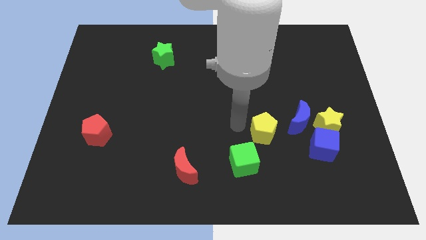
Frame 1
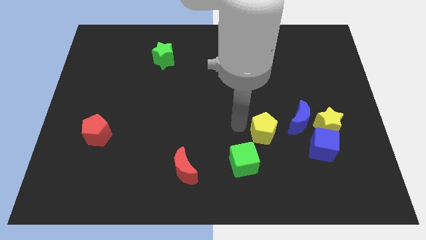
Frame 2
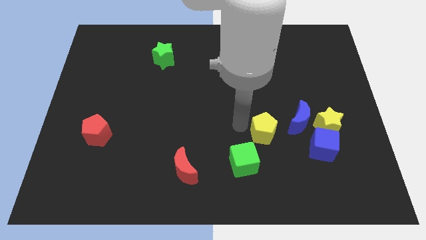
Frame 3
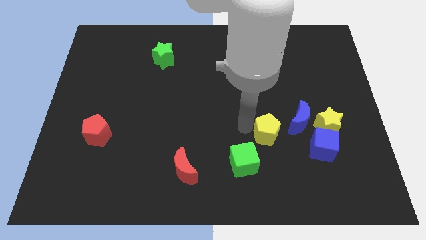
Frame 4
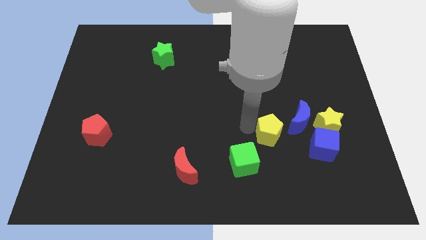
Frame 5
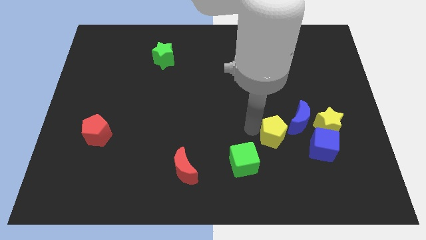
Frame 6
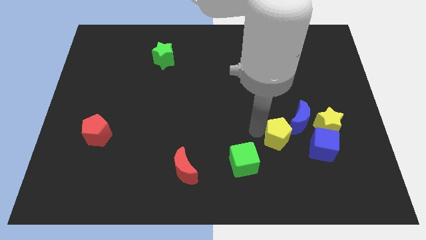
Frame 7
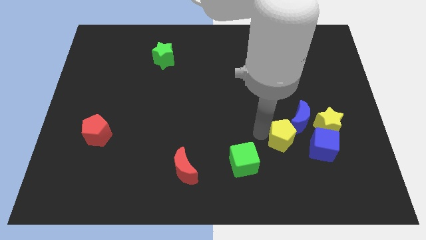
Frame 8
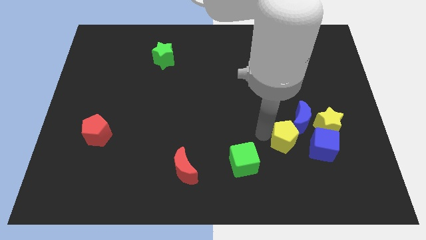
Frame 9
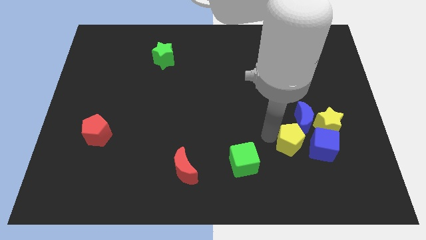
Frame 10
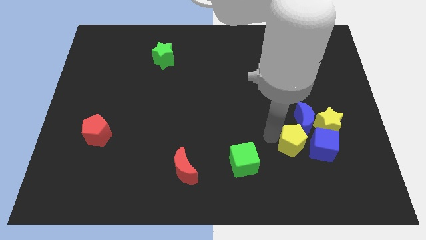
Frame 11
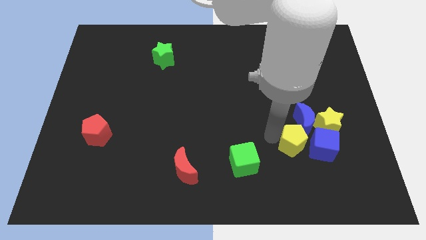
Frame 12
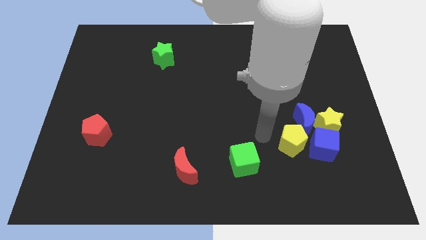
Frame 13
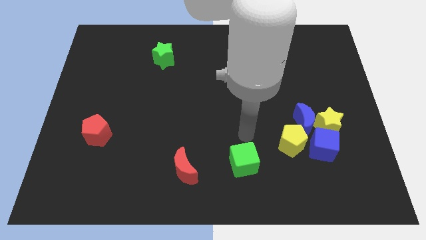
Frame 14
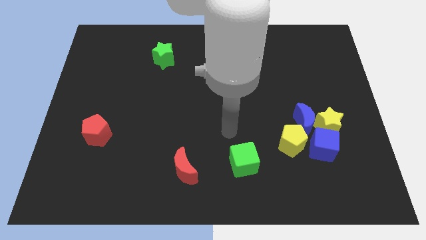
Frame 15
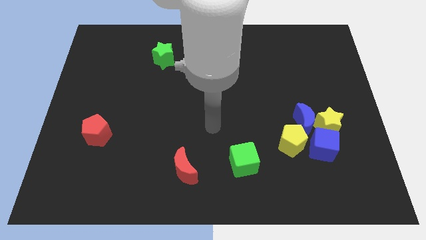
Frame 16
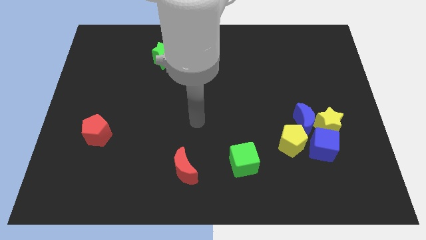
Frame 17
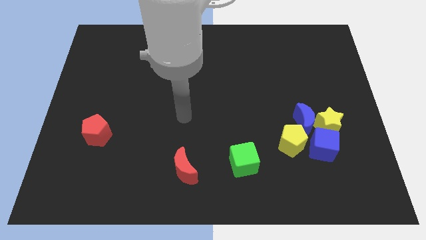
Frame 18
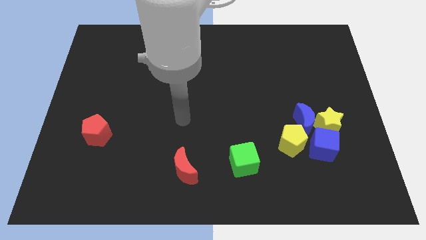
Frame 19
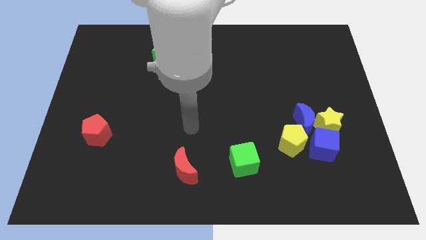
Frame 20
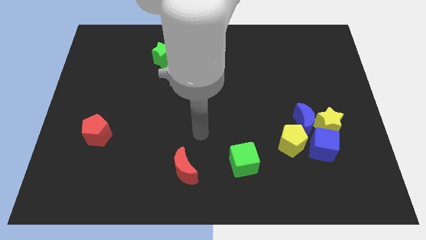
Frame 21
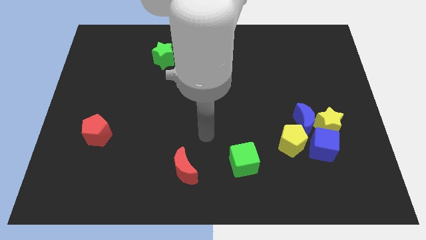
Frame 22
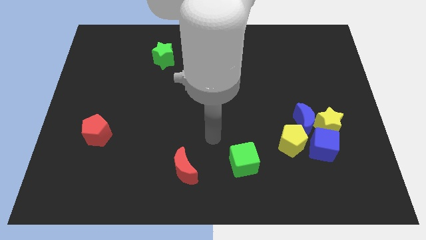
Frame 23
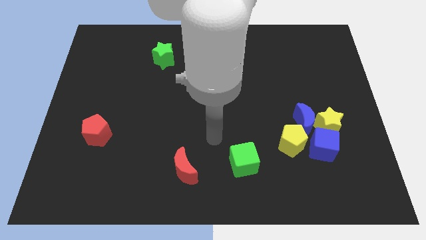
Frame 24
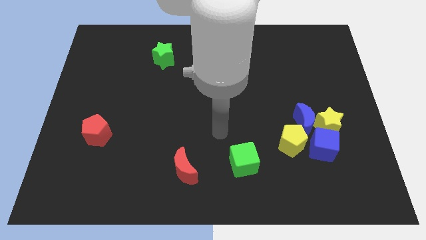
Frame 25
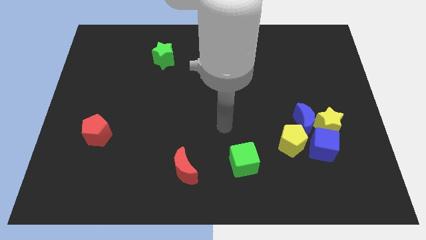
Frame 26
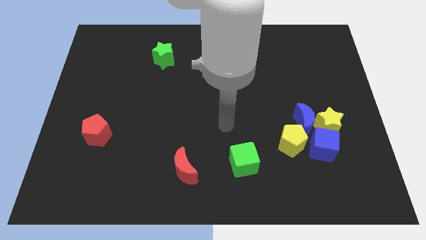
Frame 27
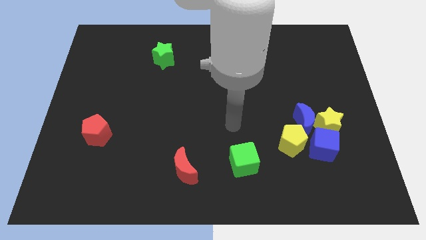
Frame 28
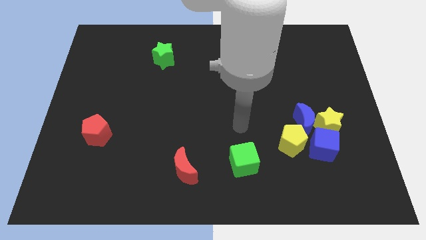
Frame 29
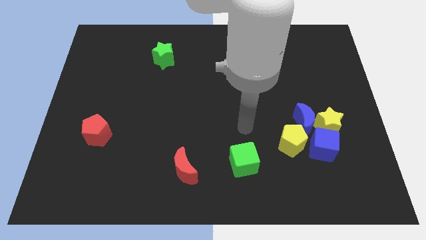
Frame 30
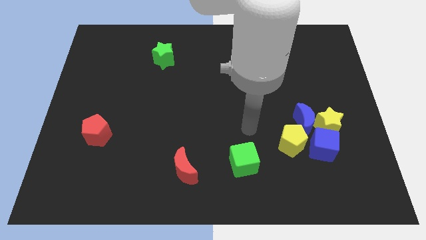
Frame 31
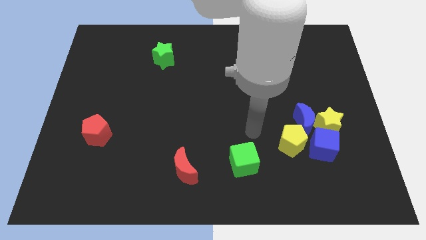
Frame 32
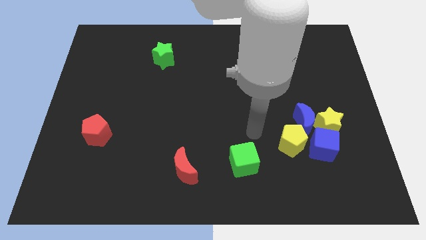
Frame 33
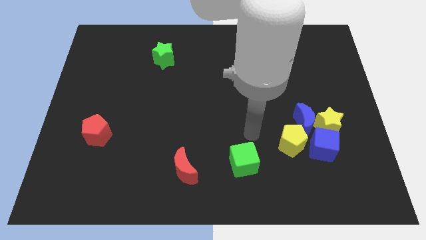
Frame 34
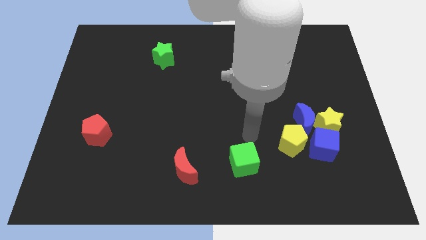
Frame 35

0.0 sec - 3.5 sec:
move the yellow pentagon below the blue moon

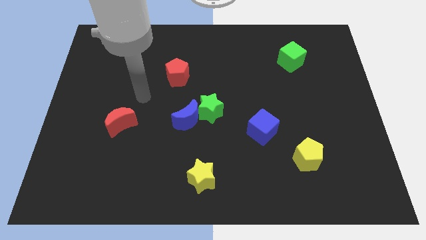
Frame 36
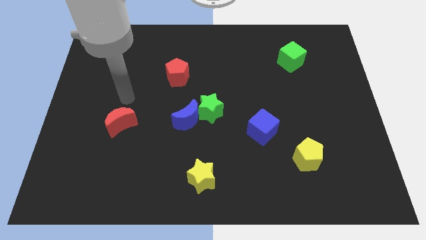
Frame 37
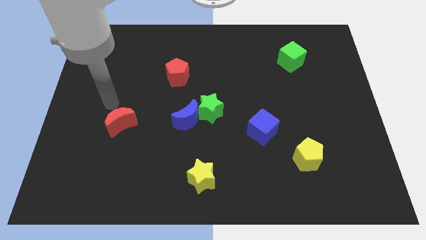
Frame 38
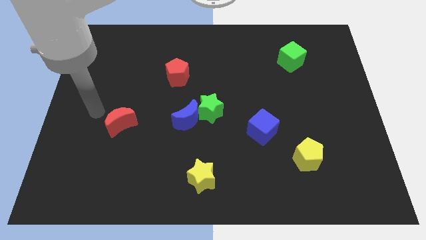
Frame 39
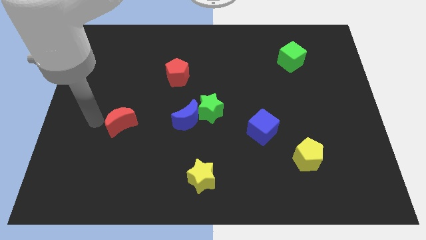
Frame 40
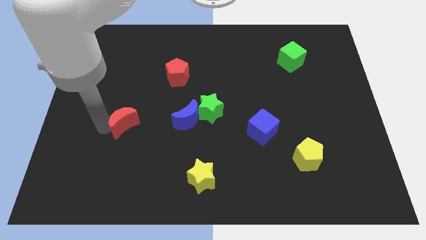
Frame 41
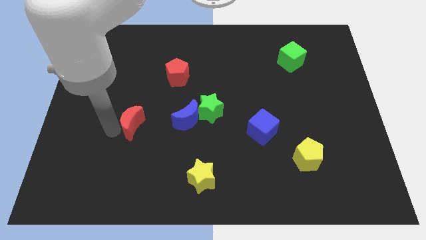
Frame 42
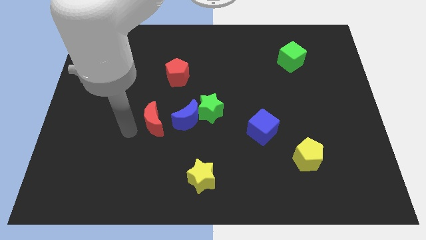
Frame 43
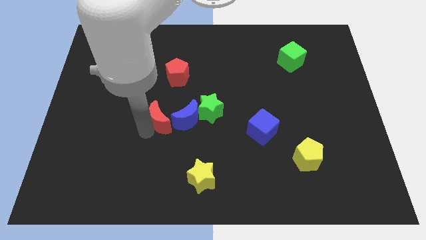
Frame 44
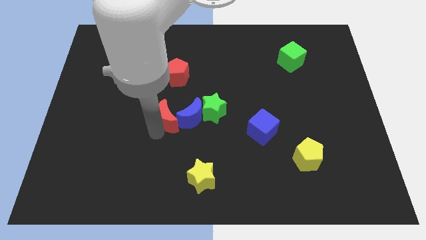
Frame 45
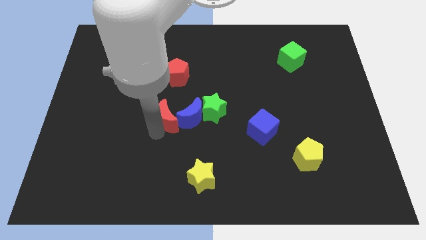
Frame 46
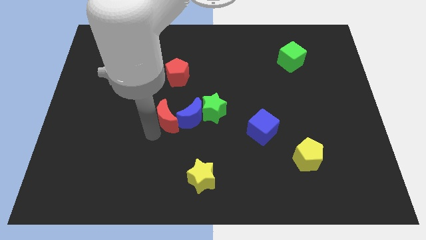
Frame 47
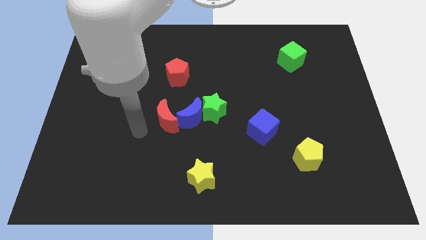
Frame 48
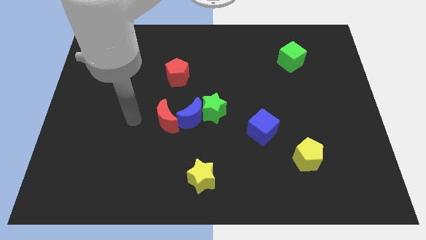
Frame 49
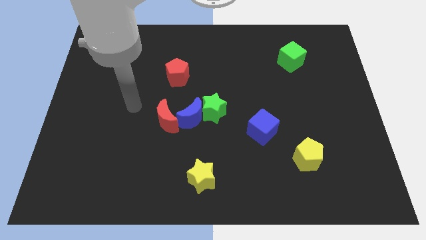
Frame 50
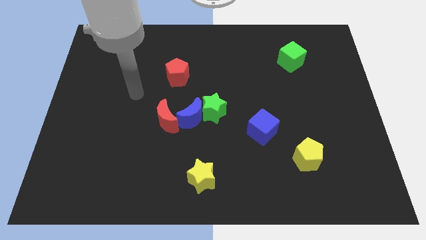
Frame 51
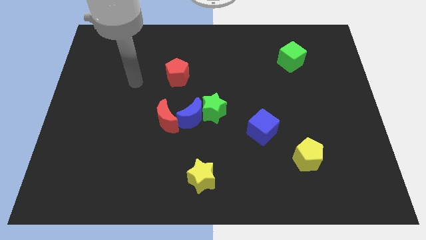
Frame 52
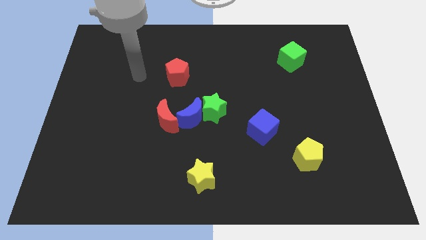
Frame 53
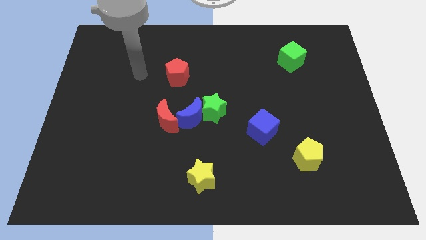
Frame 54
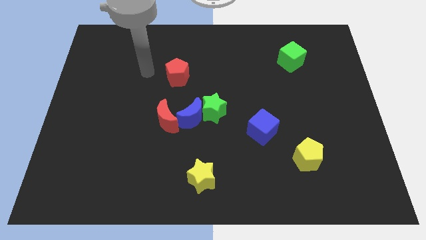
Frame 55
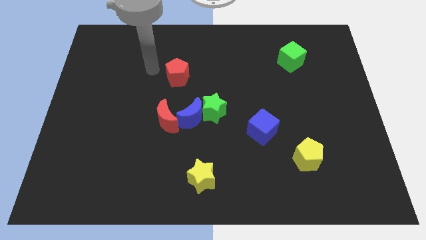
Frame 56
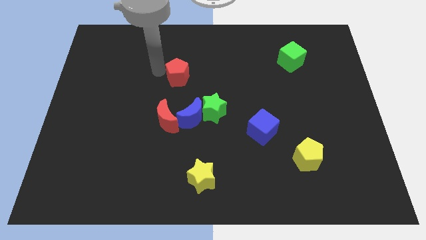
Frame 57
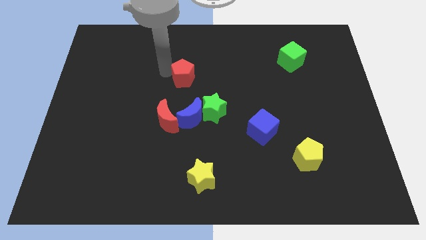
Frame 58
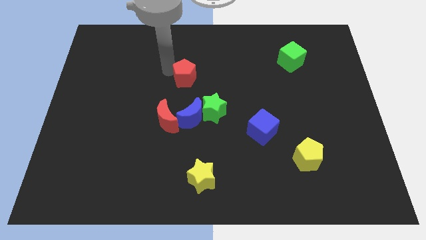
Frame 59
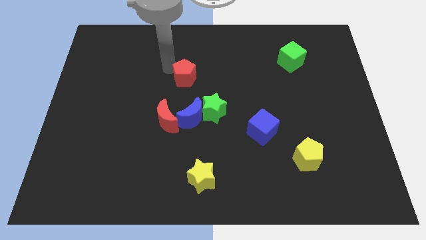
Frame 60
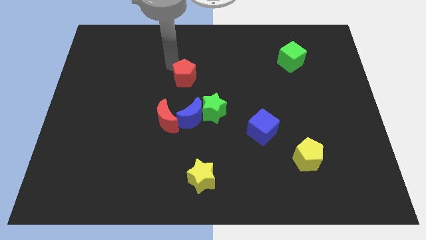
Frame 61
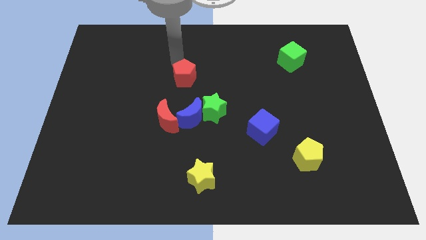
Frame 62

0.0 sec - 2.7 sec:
move the red crescent into the left side of the blue moon

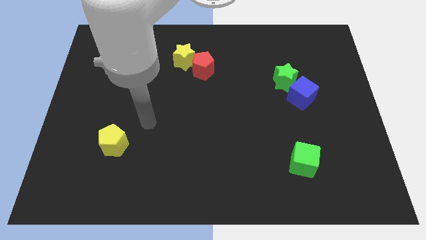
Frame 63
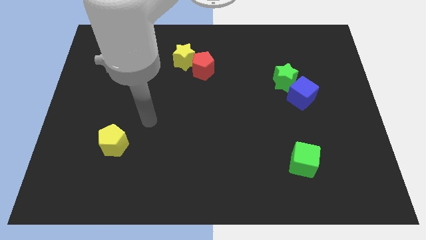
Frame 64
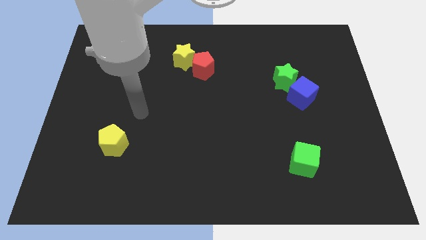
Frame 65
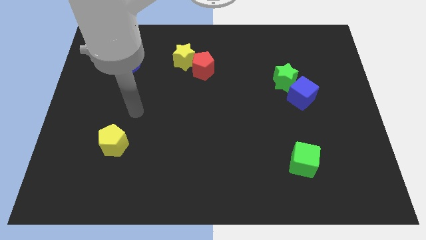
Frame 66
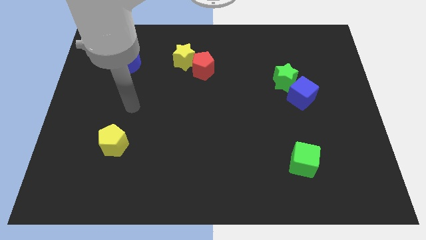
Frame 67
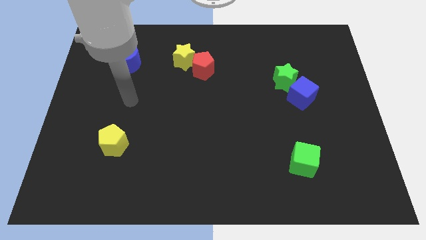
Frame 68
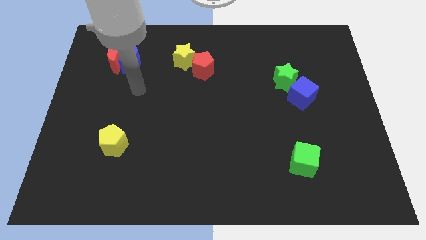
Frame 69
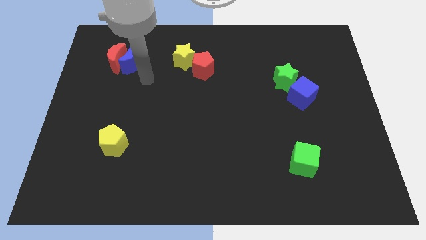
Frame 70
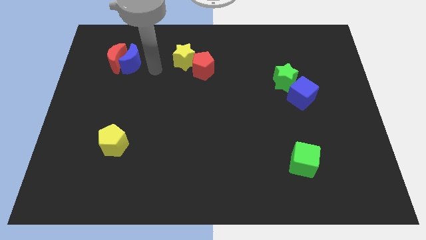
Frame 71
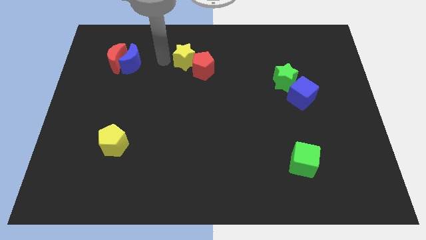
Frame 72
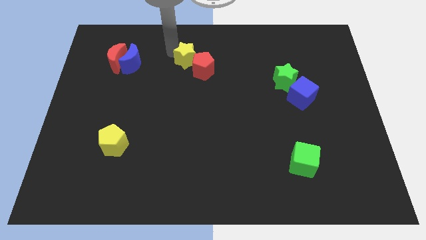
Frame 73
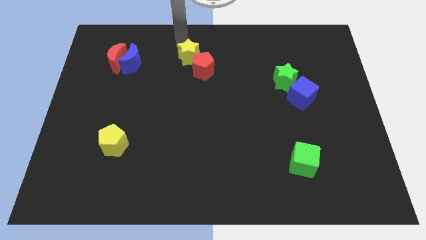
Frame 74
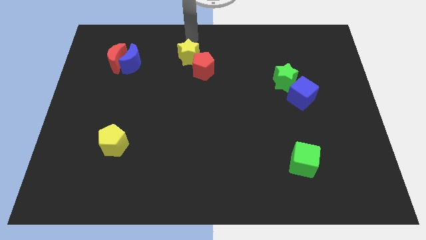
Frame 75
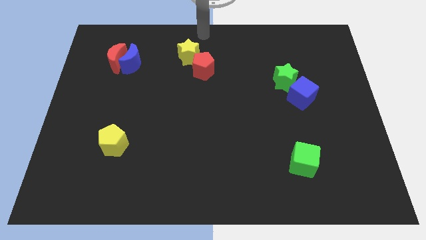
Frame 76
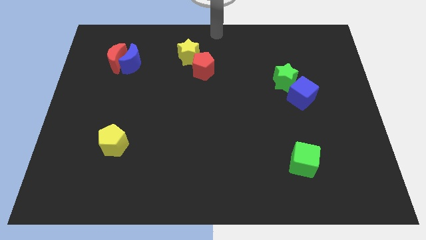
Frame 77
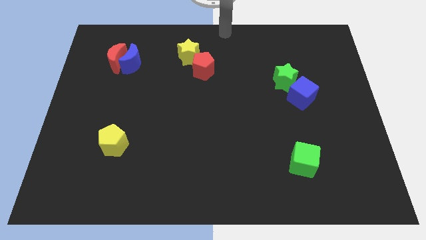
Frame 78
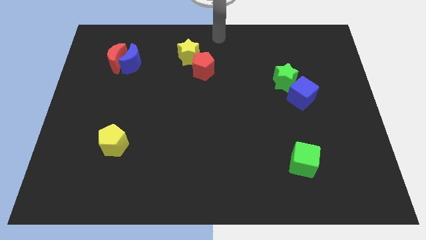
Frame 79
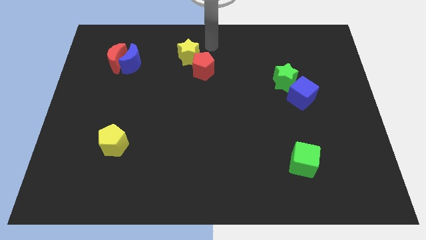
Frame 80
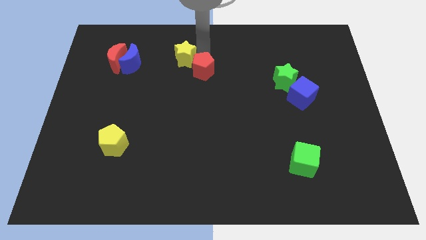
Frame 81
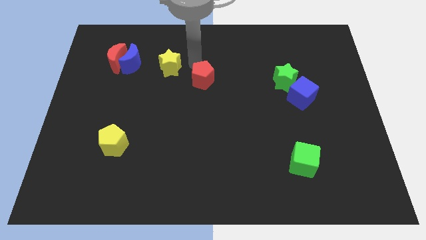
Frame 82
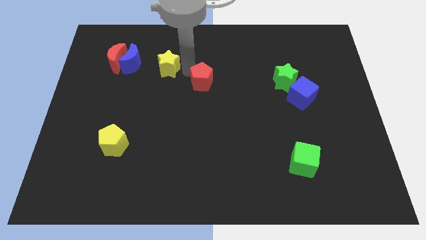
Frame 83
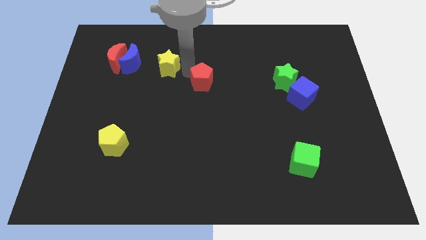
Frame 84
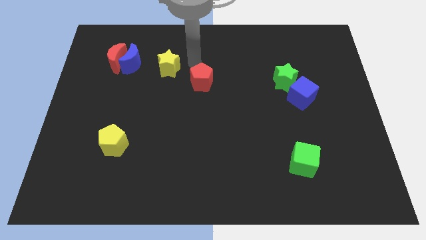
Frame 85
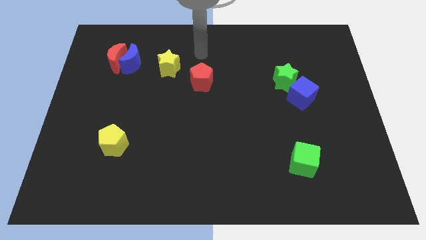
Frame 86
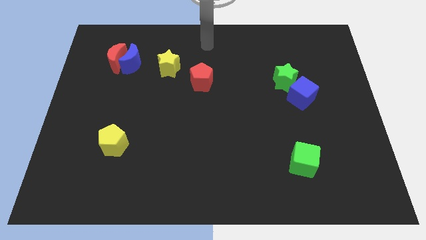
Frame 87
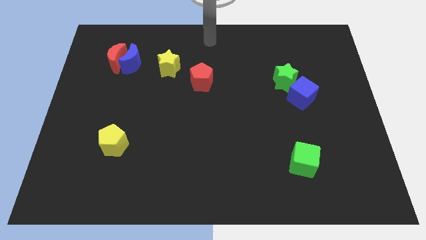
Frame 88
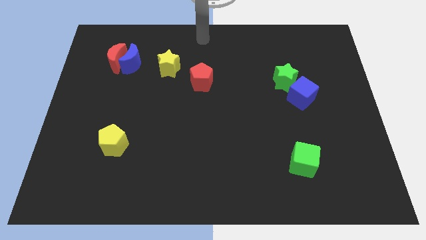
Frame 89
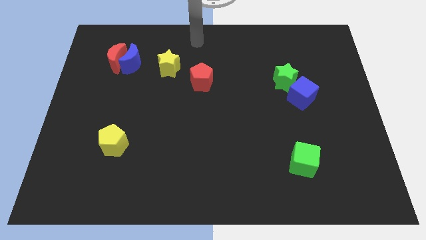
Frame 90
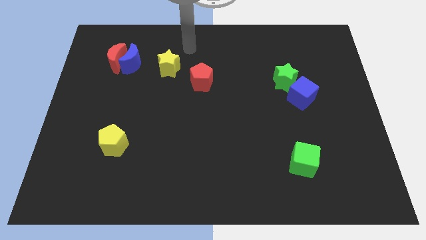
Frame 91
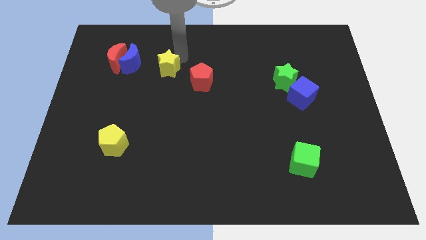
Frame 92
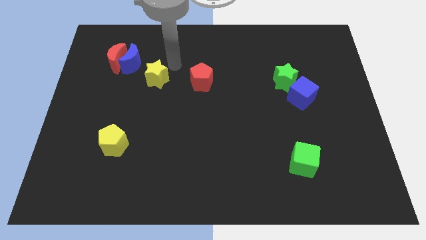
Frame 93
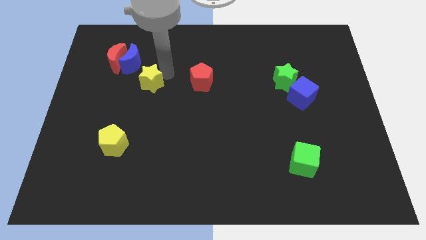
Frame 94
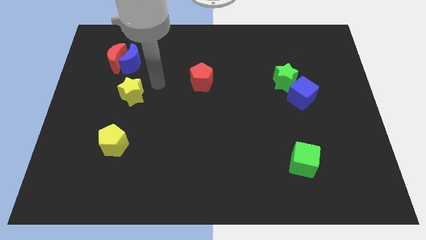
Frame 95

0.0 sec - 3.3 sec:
push the yellow star to the left of the red pentagon
